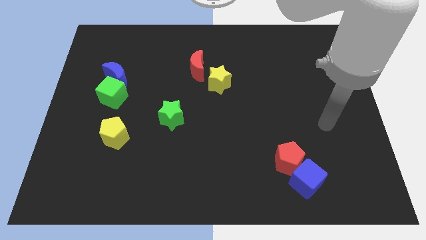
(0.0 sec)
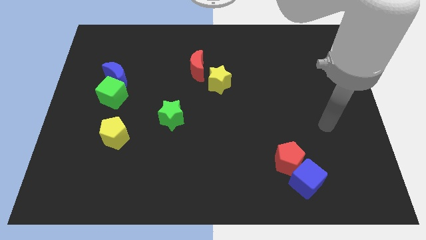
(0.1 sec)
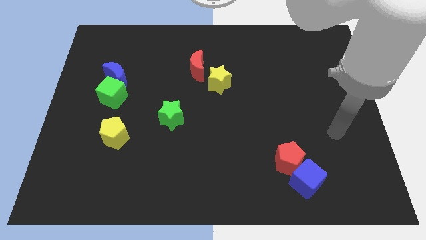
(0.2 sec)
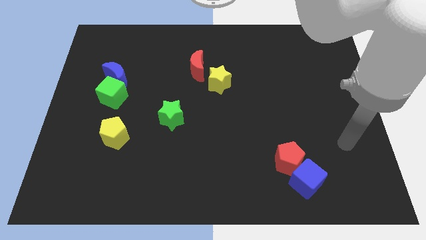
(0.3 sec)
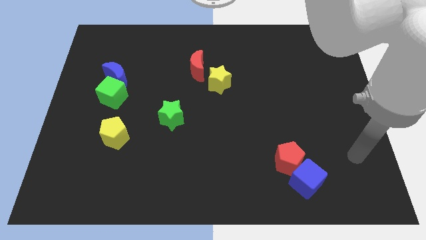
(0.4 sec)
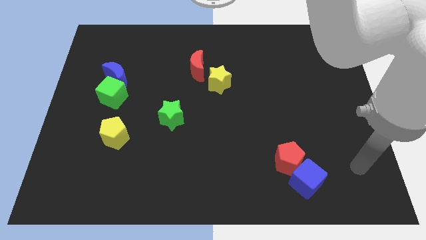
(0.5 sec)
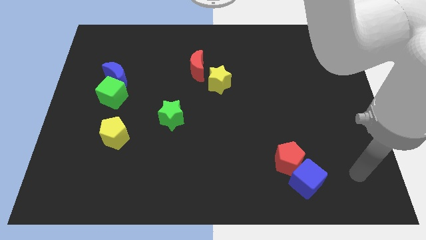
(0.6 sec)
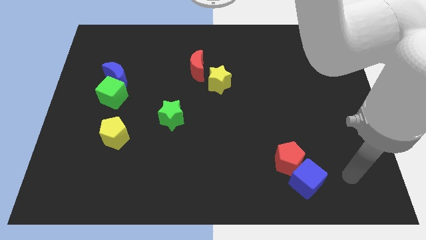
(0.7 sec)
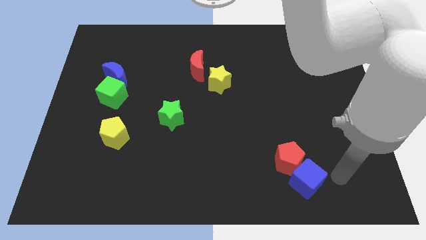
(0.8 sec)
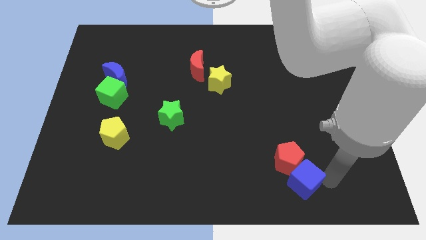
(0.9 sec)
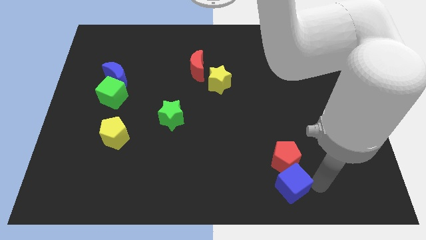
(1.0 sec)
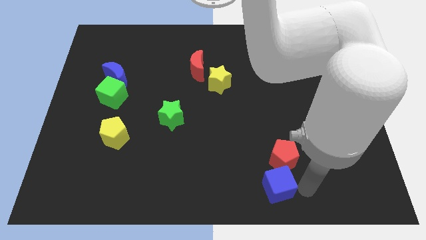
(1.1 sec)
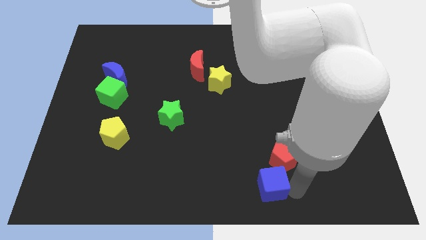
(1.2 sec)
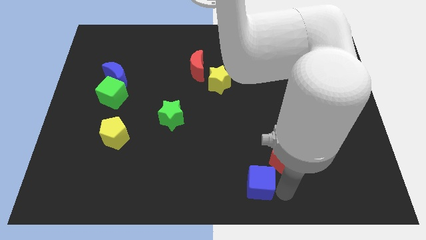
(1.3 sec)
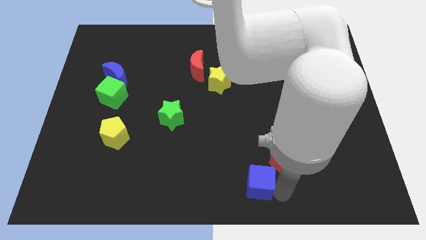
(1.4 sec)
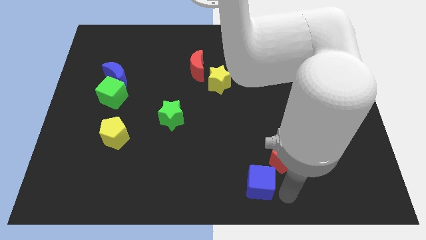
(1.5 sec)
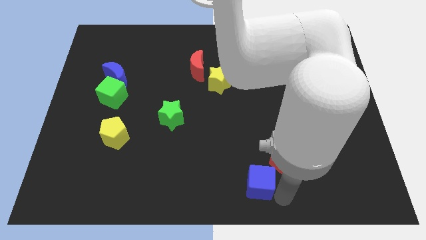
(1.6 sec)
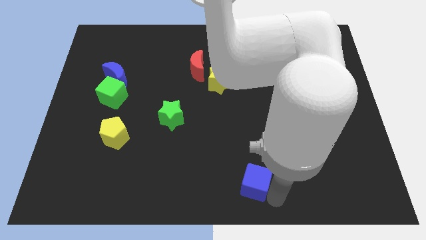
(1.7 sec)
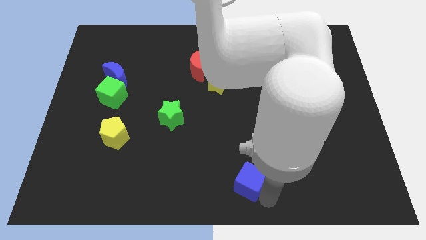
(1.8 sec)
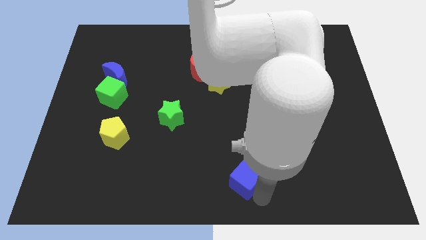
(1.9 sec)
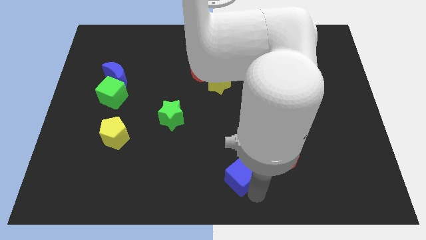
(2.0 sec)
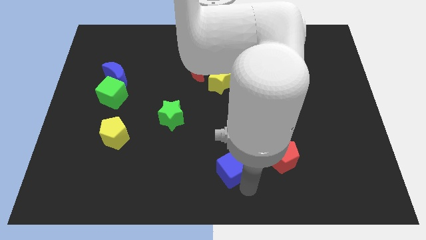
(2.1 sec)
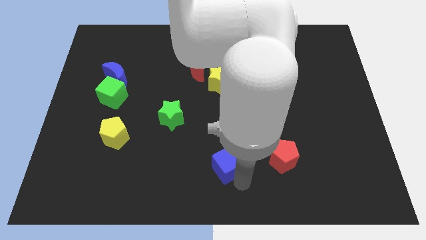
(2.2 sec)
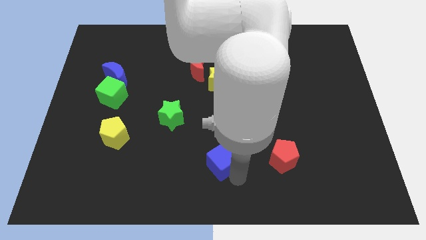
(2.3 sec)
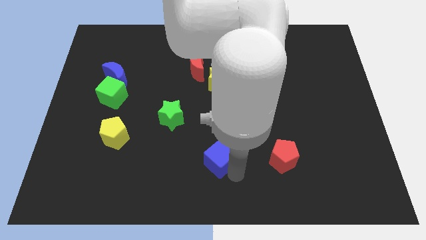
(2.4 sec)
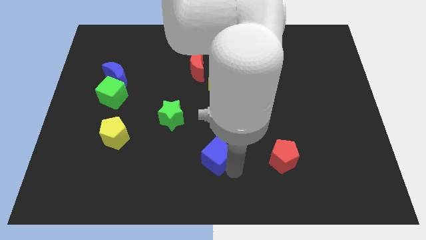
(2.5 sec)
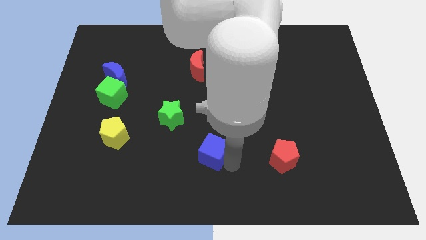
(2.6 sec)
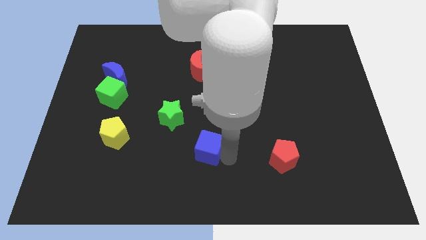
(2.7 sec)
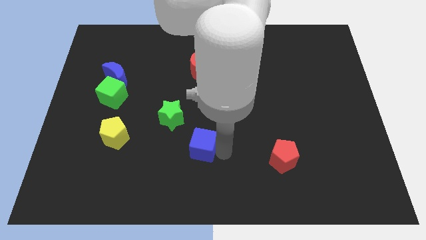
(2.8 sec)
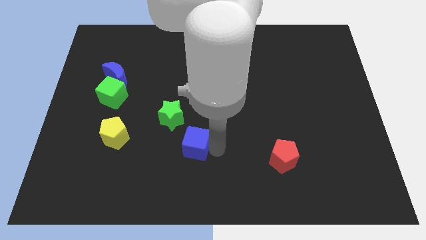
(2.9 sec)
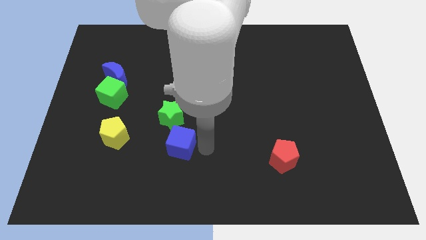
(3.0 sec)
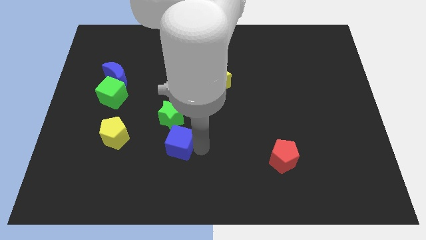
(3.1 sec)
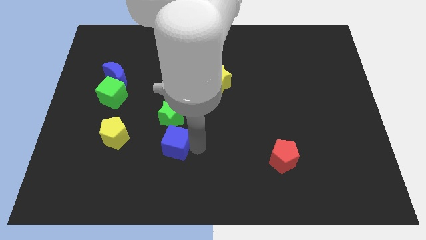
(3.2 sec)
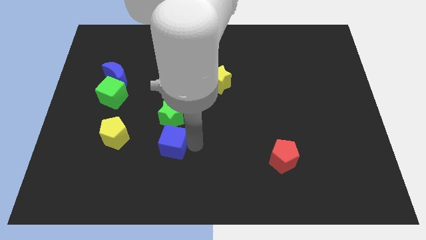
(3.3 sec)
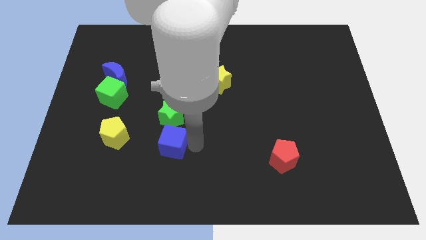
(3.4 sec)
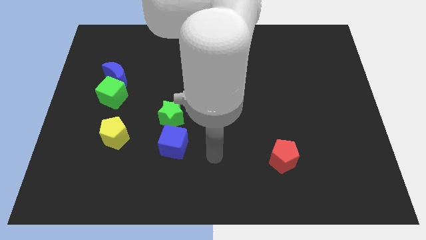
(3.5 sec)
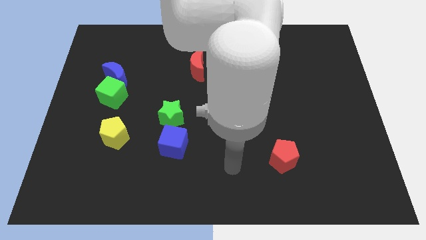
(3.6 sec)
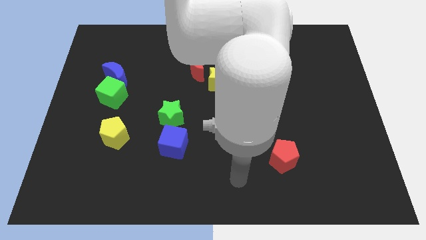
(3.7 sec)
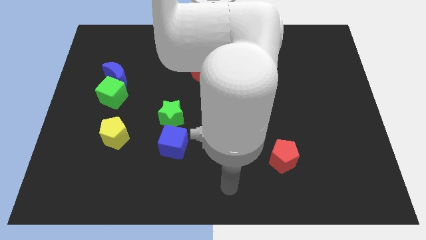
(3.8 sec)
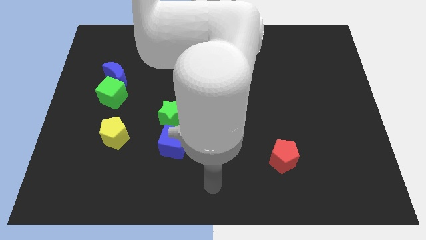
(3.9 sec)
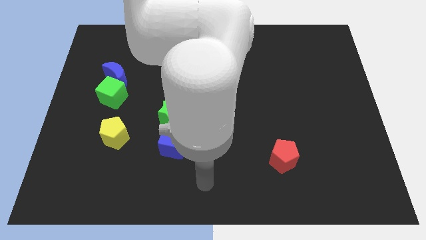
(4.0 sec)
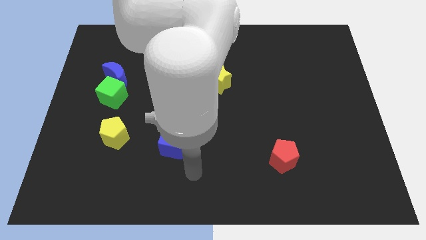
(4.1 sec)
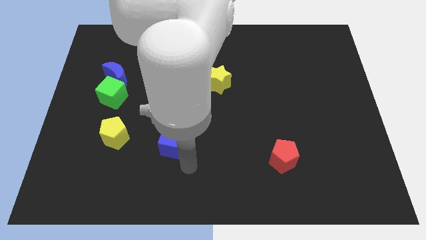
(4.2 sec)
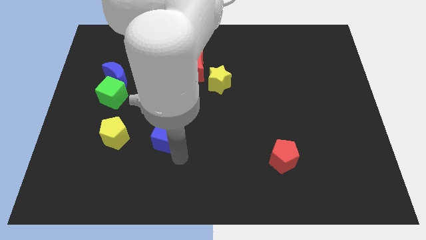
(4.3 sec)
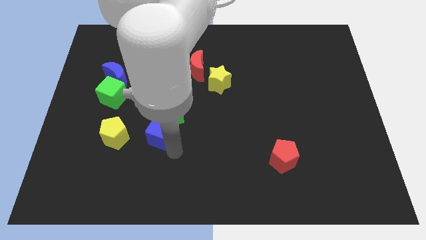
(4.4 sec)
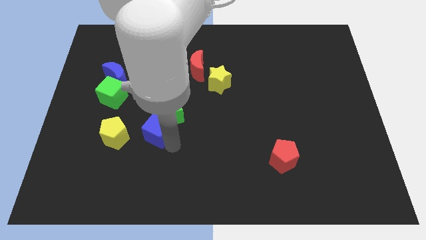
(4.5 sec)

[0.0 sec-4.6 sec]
slide the blue cube close to the green star

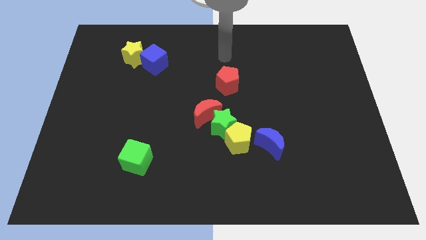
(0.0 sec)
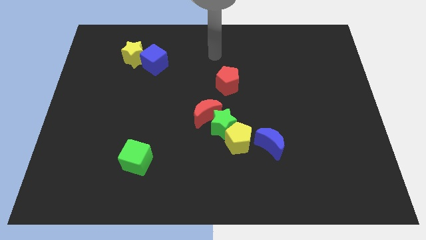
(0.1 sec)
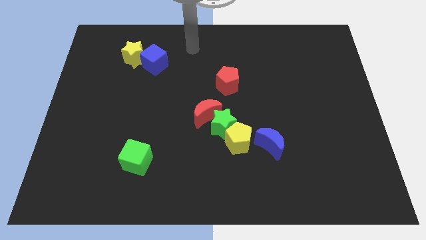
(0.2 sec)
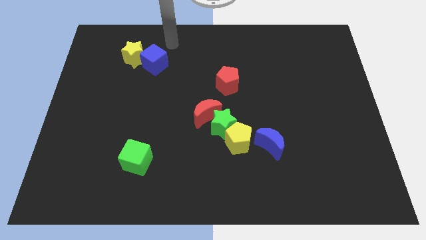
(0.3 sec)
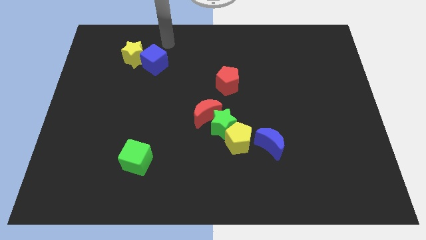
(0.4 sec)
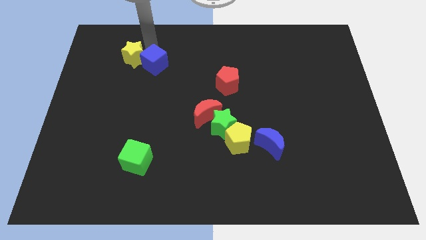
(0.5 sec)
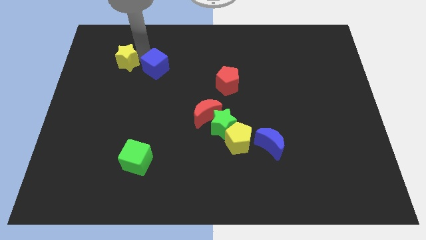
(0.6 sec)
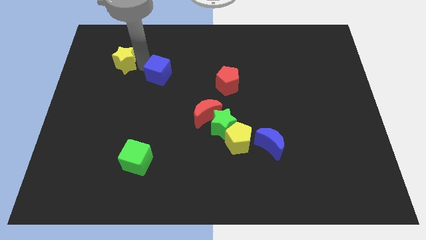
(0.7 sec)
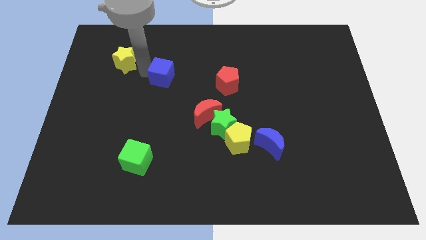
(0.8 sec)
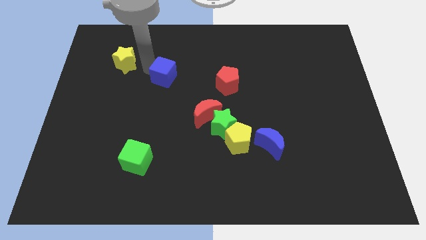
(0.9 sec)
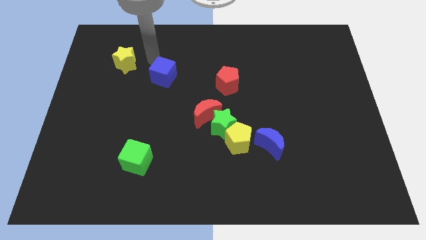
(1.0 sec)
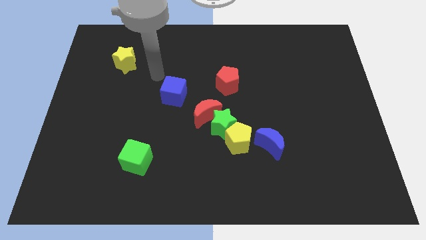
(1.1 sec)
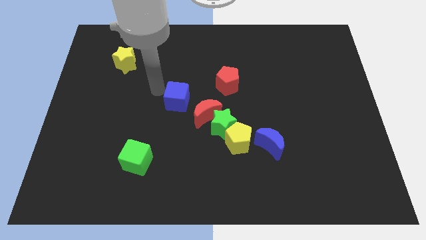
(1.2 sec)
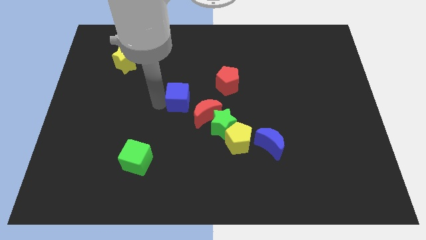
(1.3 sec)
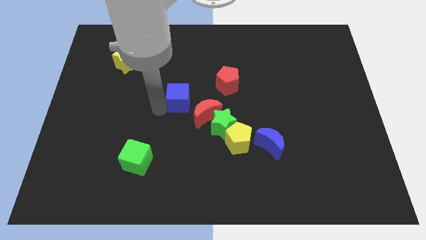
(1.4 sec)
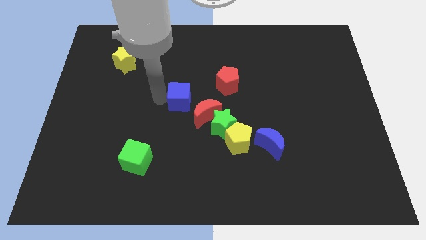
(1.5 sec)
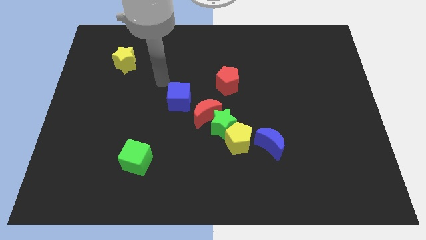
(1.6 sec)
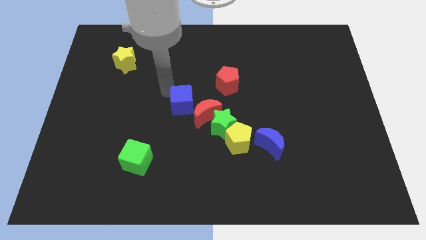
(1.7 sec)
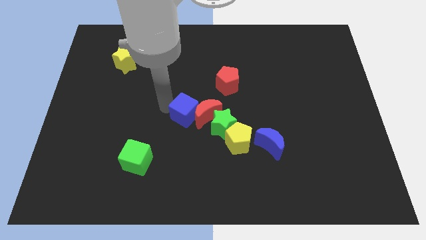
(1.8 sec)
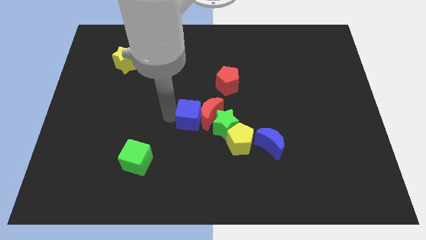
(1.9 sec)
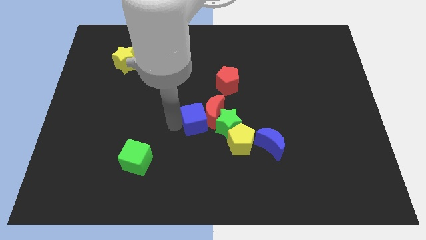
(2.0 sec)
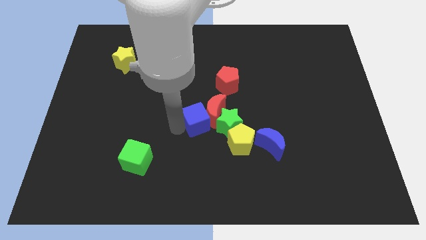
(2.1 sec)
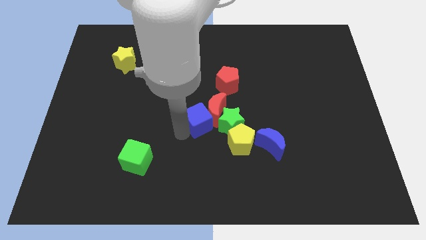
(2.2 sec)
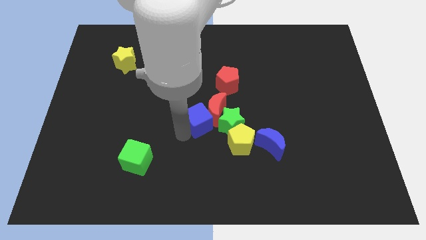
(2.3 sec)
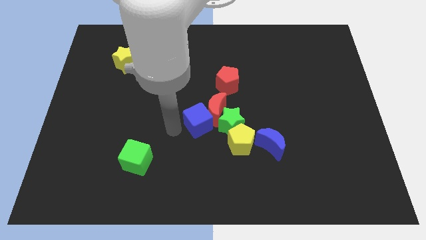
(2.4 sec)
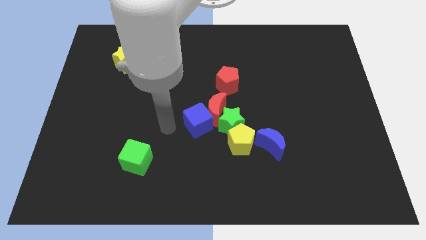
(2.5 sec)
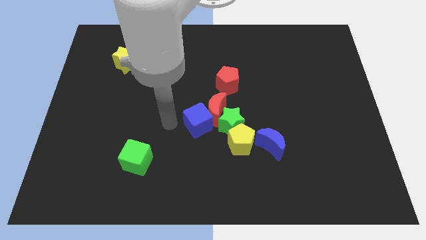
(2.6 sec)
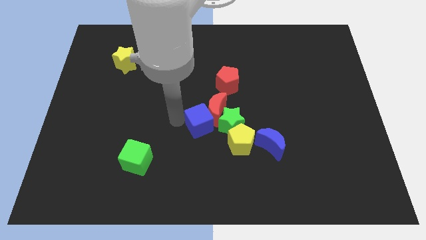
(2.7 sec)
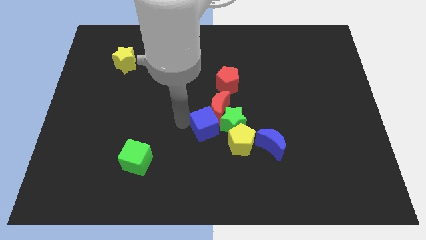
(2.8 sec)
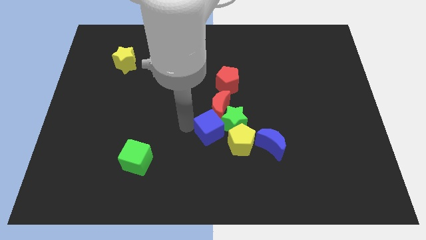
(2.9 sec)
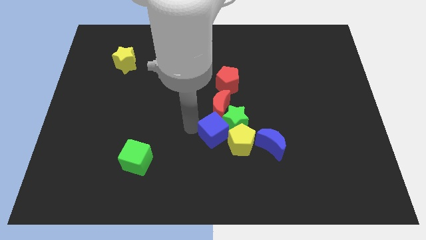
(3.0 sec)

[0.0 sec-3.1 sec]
push the blue cube next to the green star

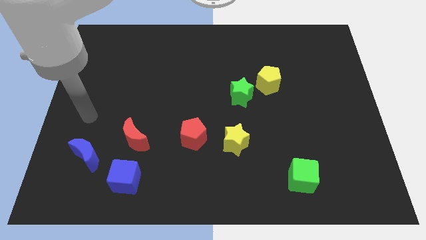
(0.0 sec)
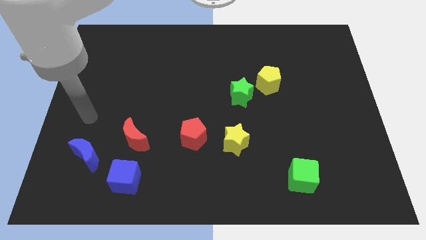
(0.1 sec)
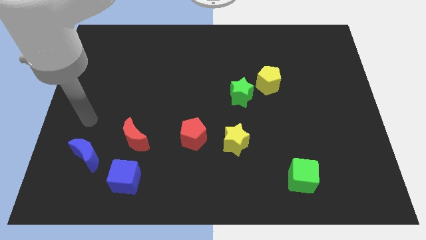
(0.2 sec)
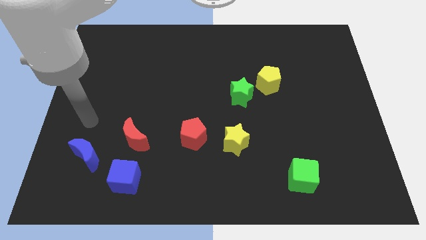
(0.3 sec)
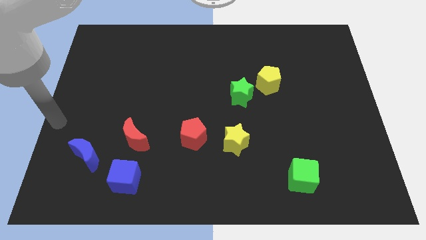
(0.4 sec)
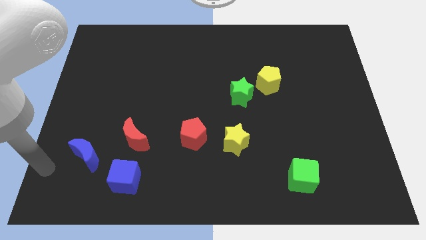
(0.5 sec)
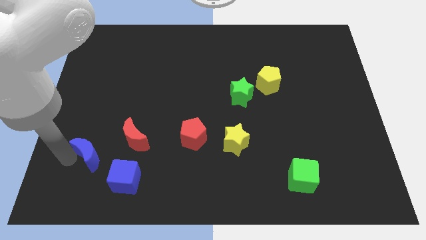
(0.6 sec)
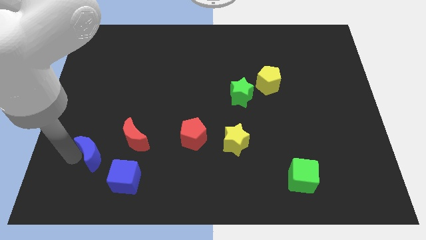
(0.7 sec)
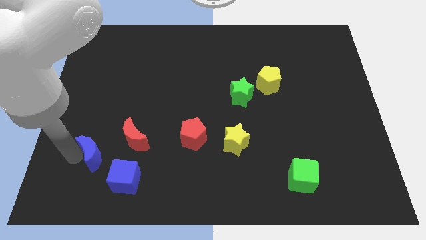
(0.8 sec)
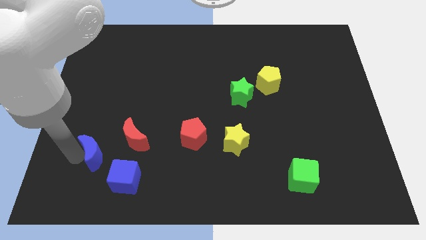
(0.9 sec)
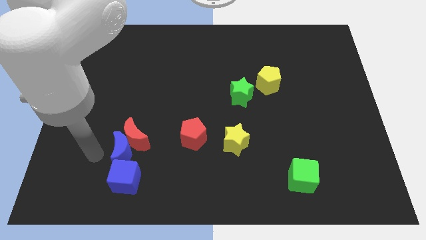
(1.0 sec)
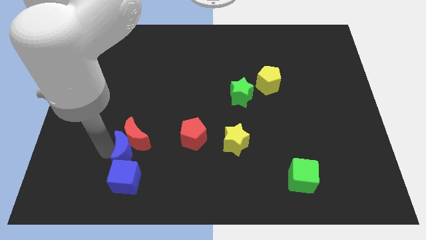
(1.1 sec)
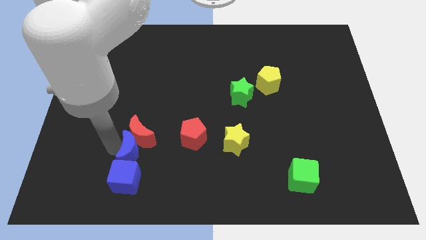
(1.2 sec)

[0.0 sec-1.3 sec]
move the blue moon to the red moon
